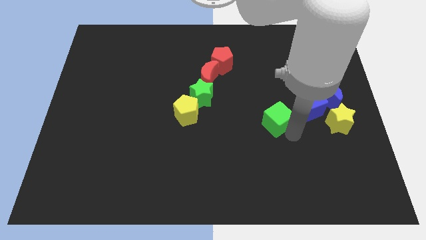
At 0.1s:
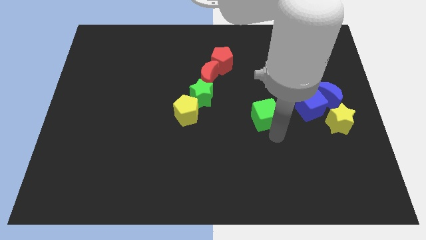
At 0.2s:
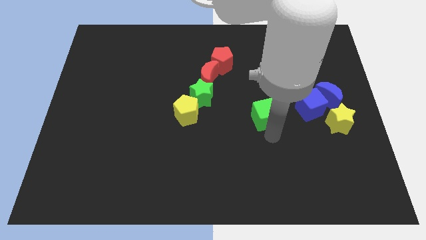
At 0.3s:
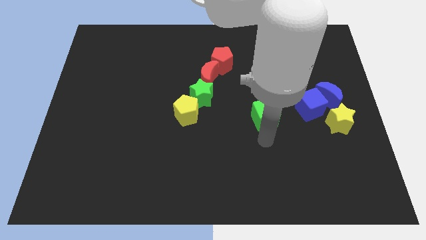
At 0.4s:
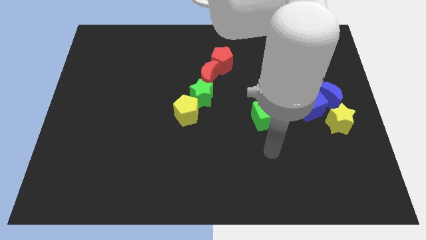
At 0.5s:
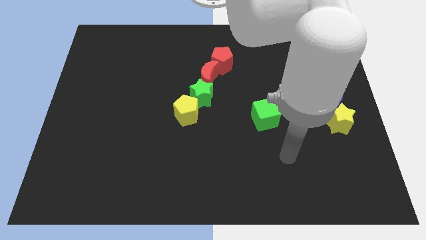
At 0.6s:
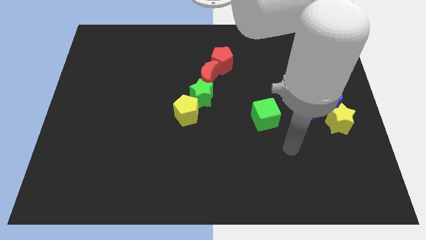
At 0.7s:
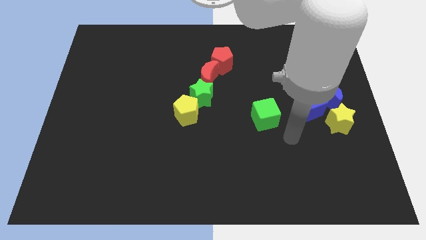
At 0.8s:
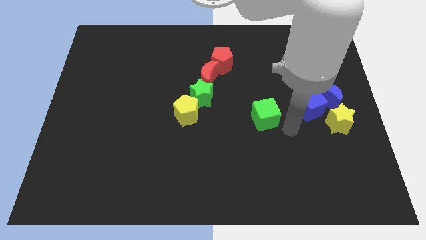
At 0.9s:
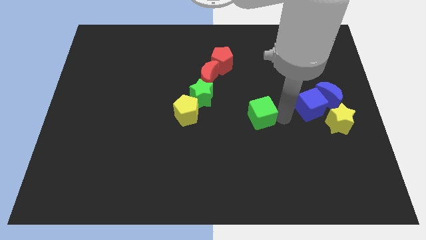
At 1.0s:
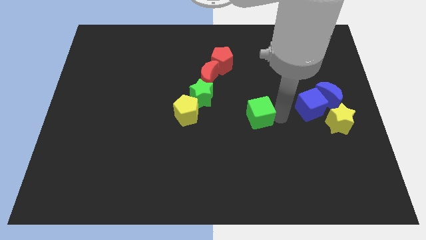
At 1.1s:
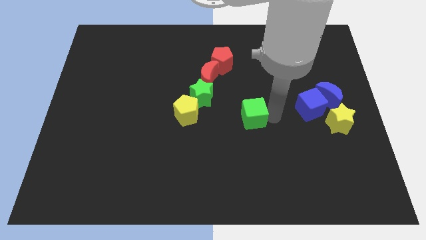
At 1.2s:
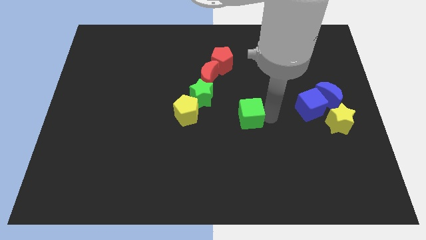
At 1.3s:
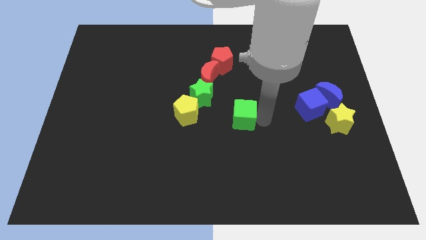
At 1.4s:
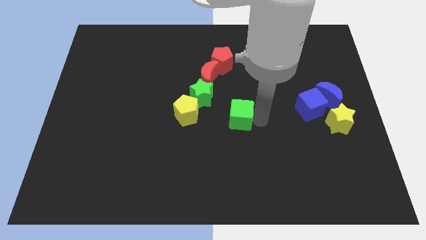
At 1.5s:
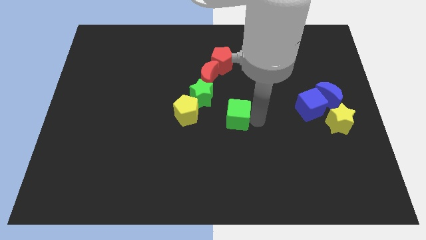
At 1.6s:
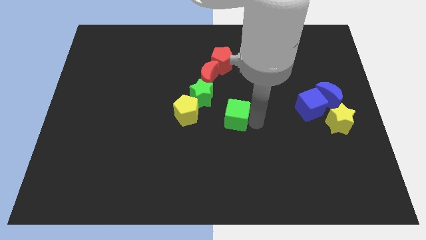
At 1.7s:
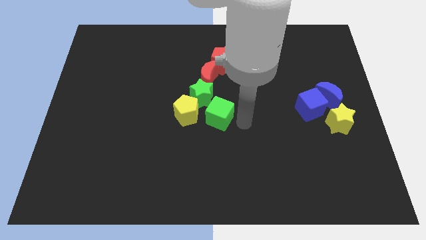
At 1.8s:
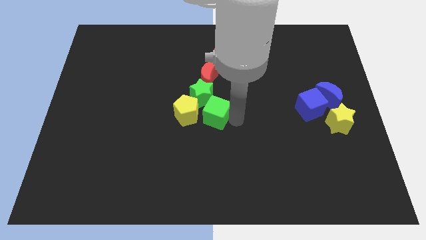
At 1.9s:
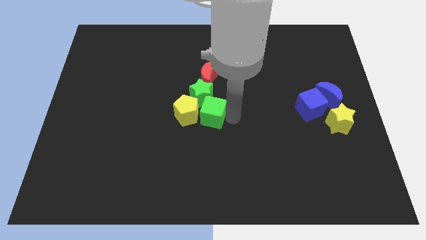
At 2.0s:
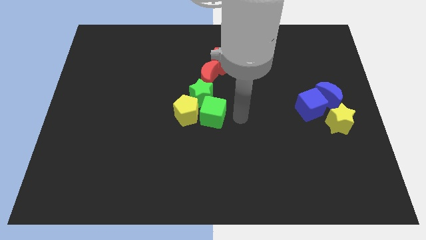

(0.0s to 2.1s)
move the green cube to the right side of the yellow pentagon

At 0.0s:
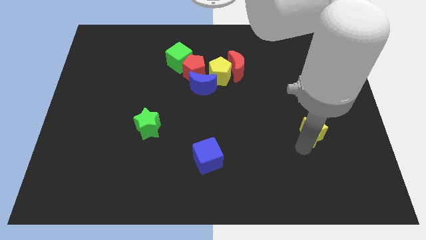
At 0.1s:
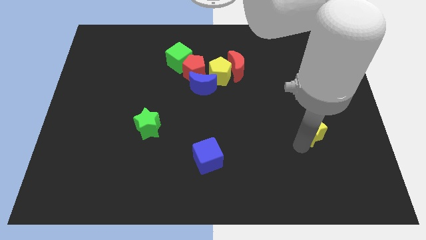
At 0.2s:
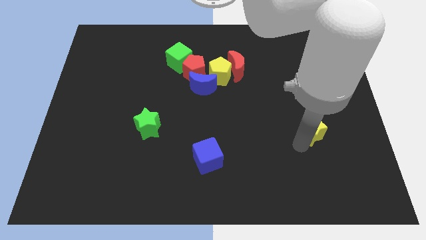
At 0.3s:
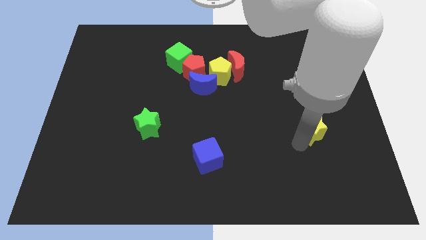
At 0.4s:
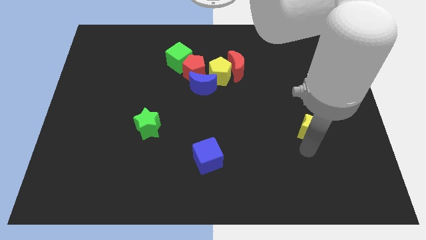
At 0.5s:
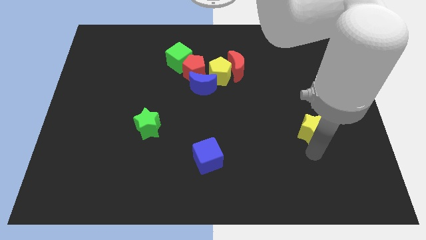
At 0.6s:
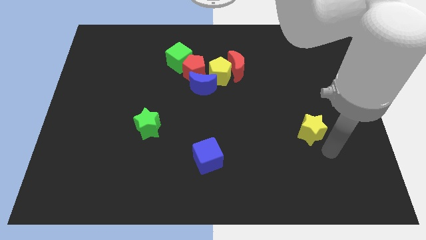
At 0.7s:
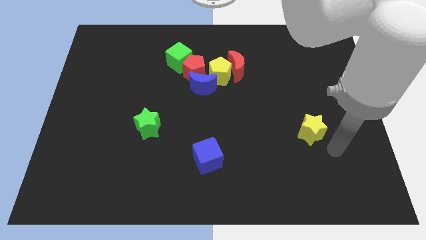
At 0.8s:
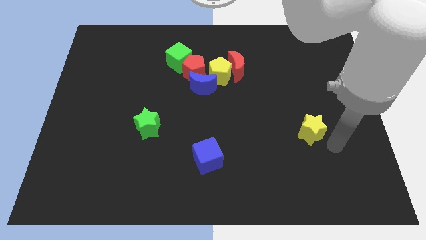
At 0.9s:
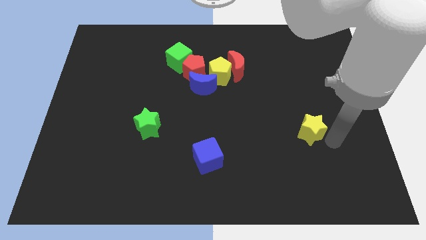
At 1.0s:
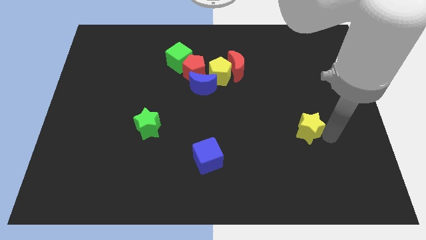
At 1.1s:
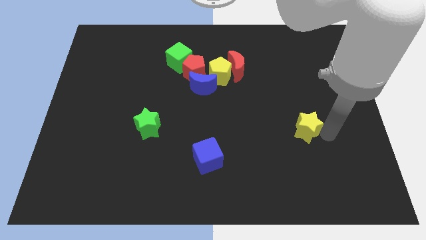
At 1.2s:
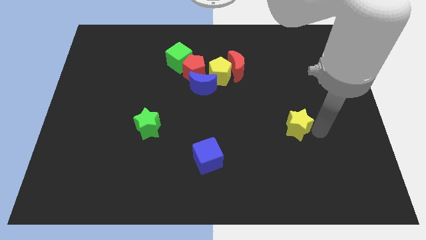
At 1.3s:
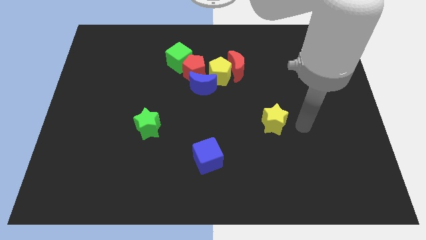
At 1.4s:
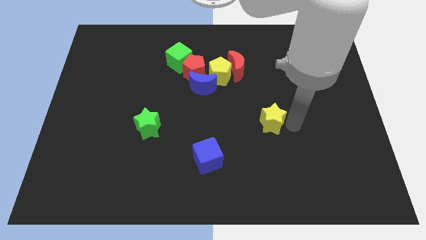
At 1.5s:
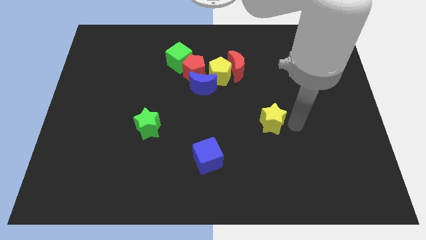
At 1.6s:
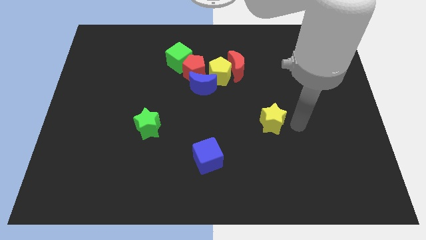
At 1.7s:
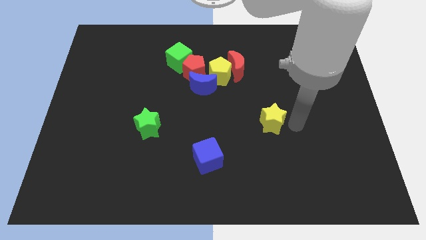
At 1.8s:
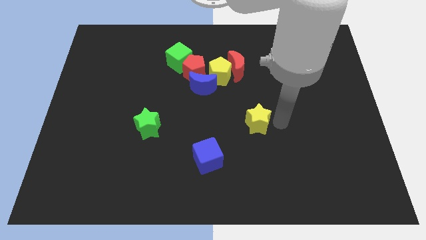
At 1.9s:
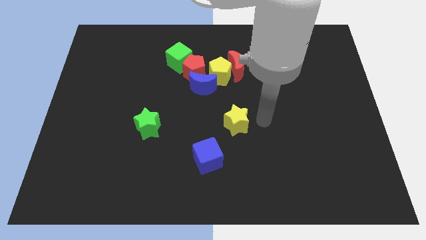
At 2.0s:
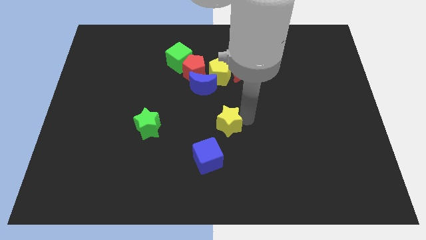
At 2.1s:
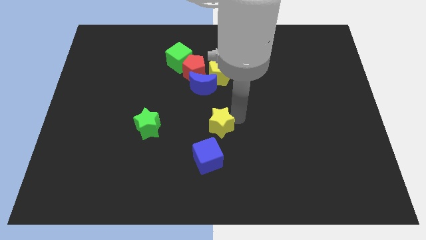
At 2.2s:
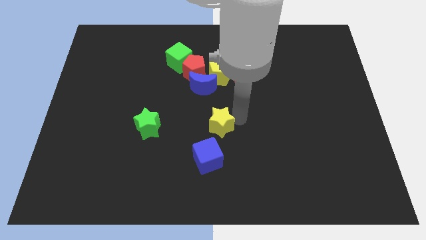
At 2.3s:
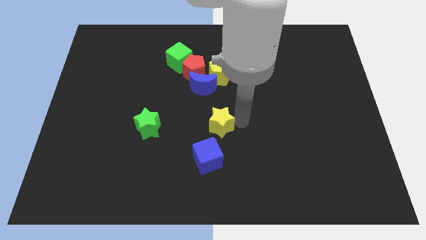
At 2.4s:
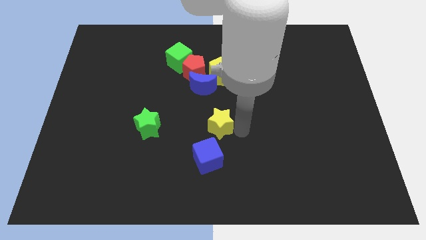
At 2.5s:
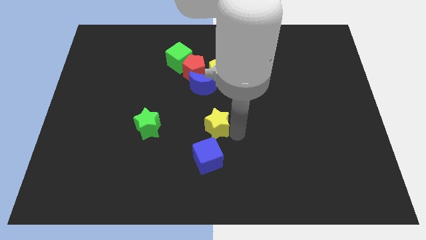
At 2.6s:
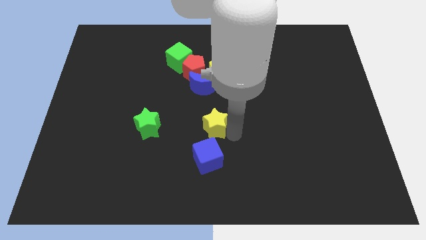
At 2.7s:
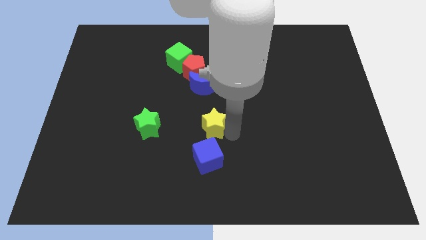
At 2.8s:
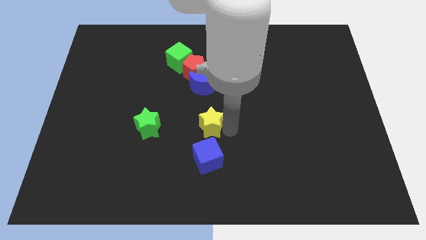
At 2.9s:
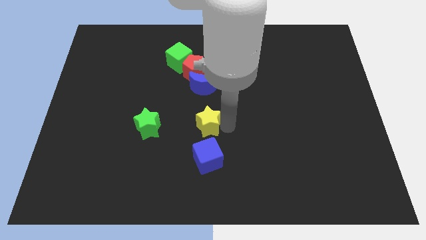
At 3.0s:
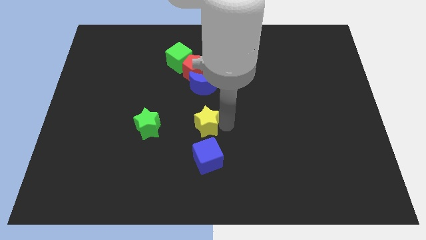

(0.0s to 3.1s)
put the yellow star above the blue cube

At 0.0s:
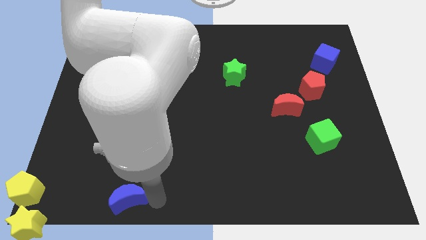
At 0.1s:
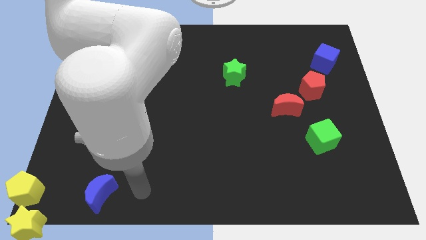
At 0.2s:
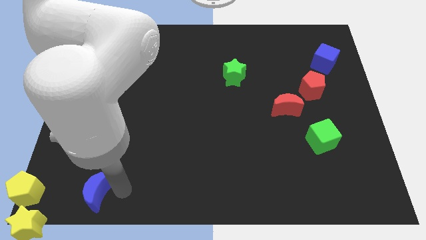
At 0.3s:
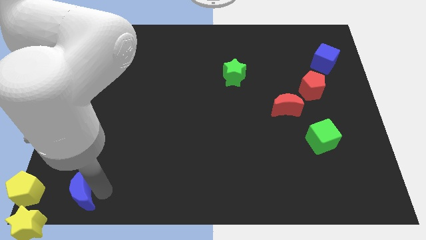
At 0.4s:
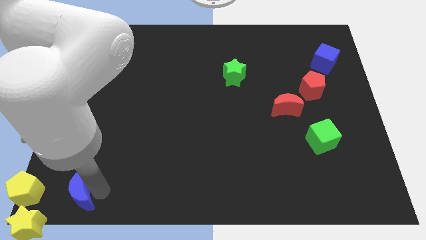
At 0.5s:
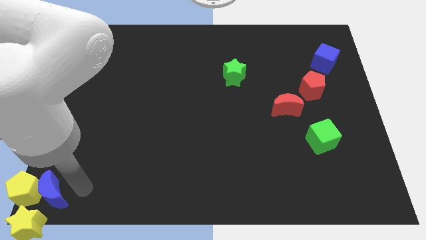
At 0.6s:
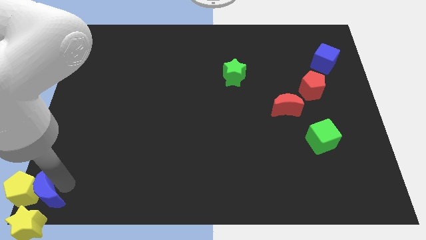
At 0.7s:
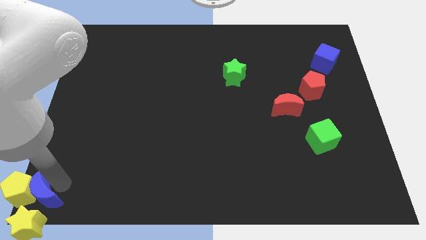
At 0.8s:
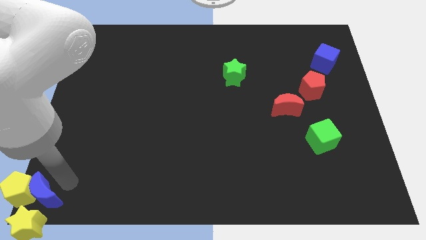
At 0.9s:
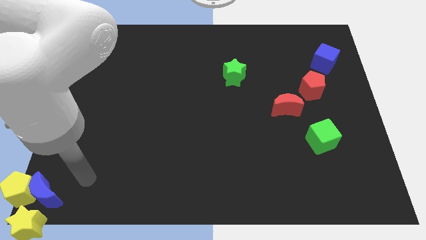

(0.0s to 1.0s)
push the blue crescent to the right of the yellow pentagon

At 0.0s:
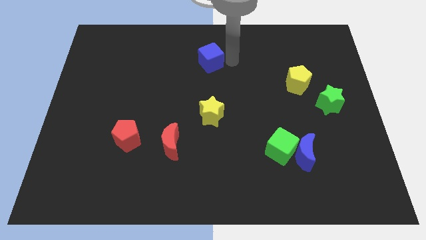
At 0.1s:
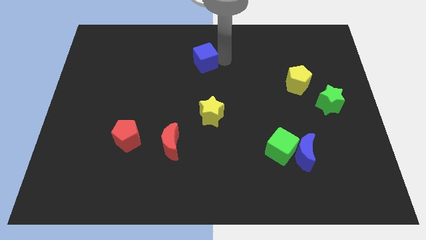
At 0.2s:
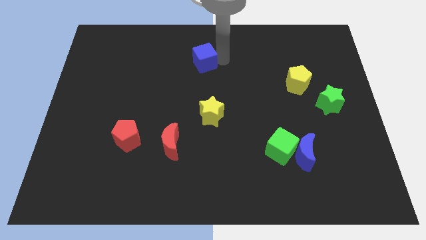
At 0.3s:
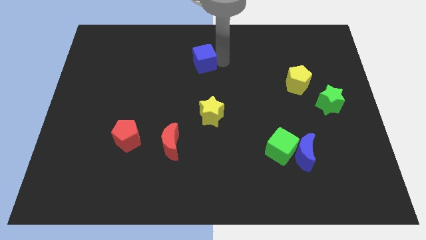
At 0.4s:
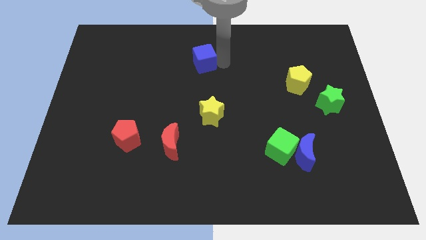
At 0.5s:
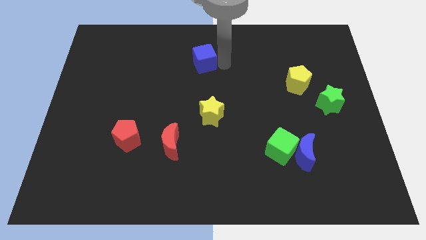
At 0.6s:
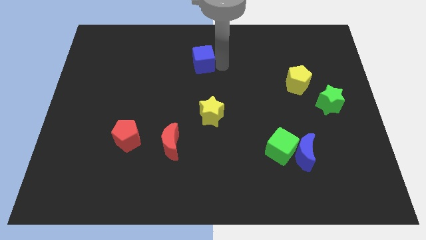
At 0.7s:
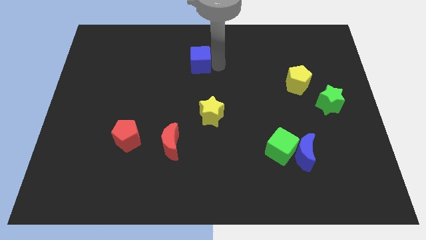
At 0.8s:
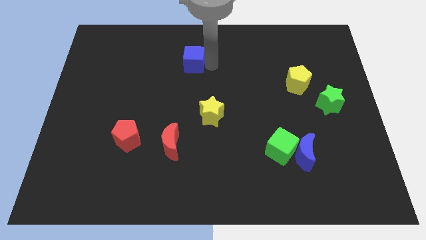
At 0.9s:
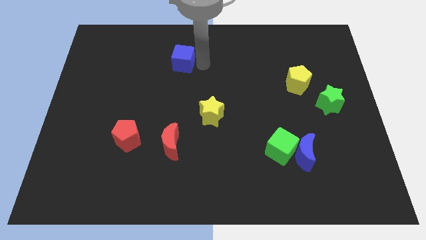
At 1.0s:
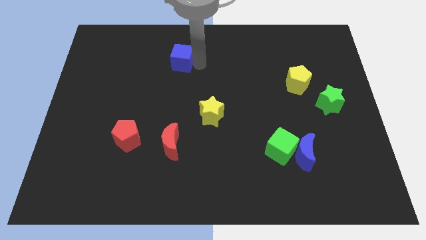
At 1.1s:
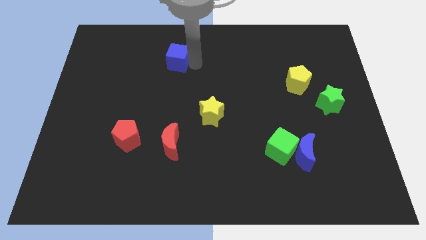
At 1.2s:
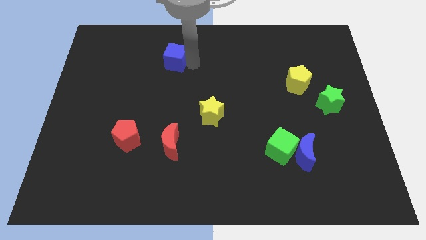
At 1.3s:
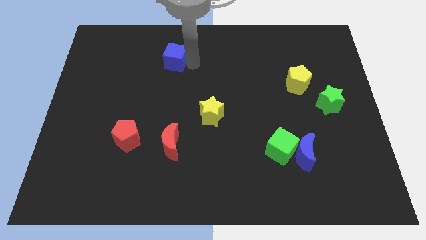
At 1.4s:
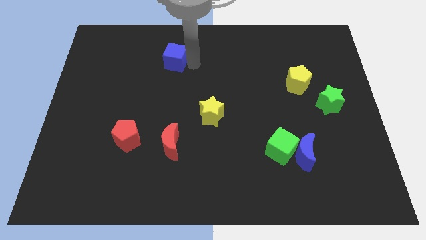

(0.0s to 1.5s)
push blue cube to the top of red moon

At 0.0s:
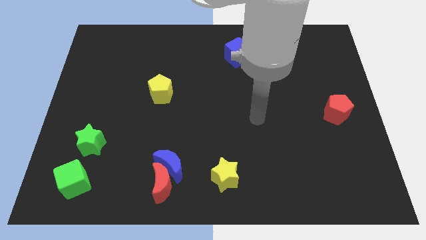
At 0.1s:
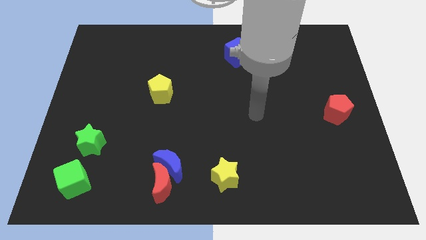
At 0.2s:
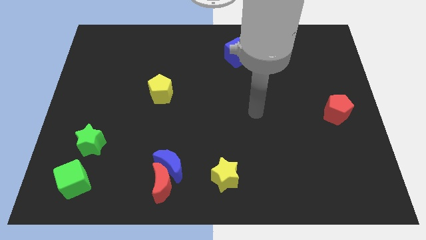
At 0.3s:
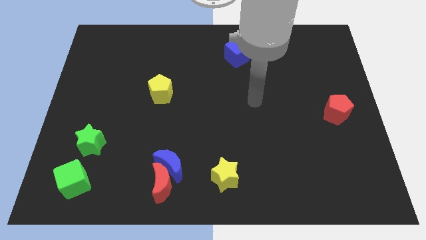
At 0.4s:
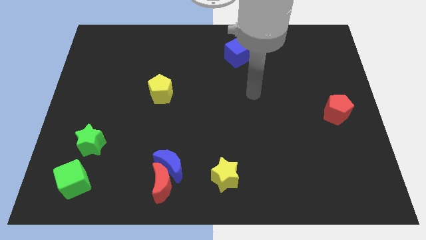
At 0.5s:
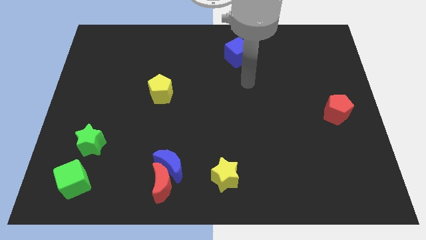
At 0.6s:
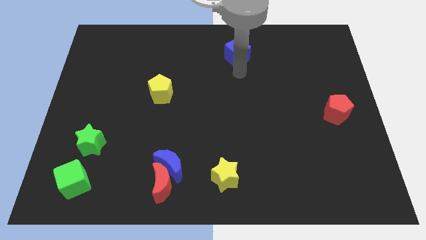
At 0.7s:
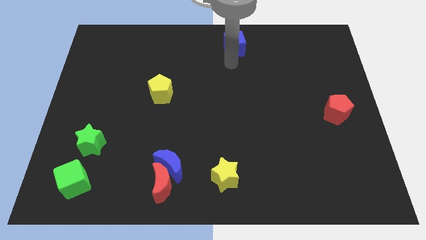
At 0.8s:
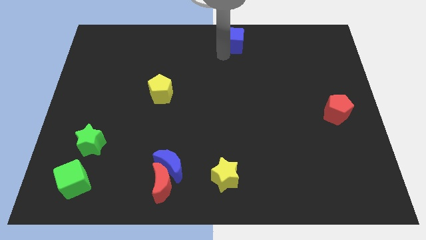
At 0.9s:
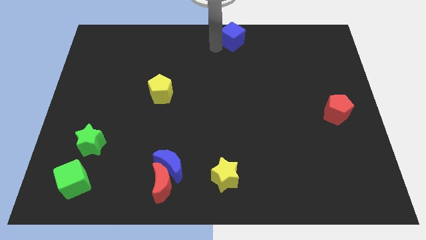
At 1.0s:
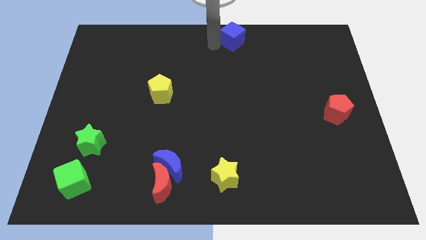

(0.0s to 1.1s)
slide blue cube to the top center

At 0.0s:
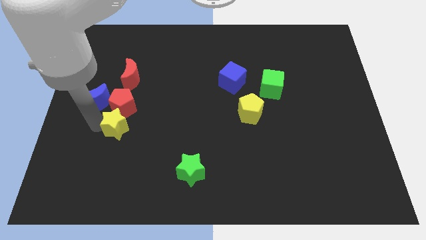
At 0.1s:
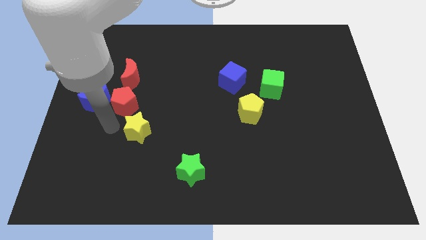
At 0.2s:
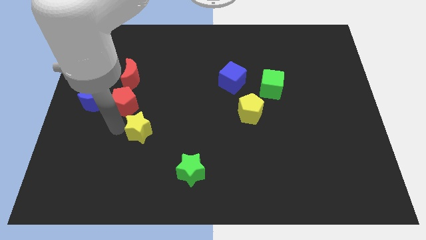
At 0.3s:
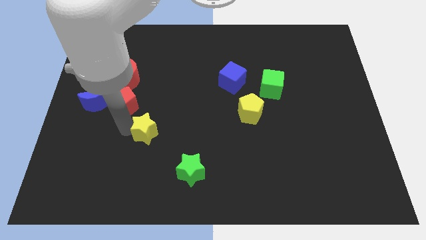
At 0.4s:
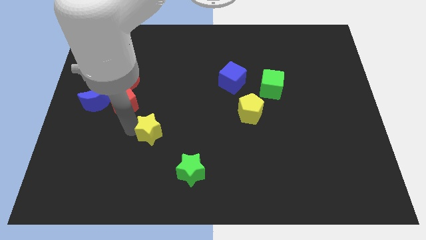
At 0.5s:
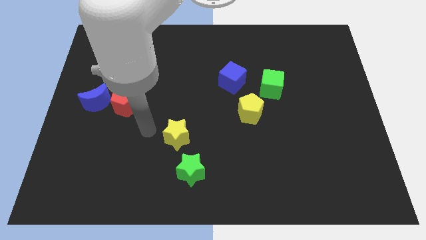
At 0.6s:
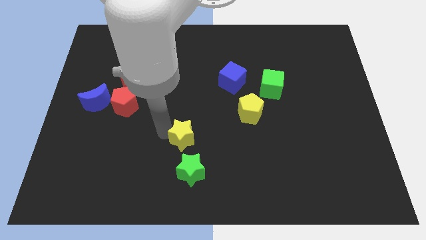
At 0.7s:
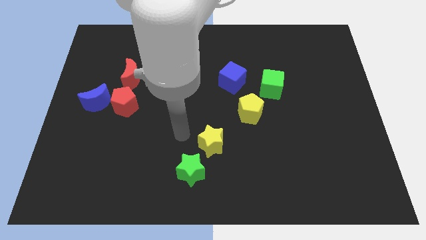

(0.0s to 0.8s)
place yellow star to the top right of the green star
